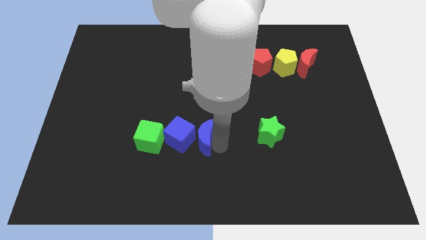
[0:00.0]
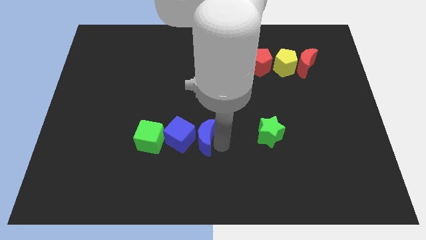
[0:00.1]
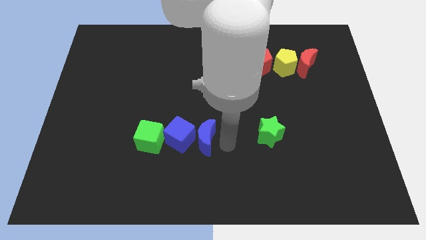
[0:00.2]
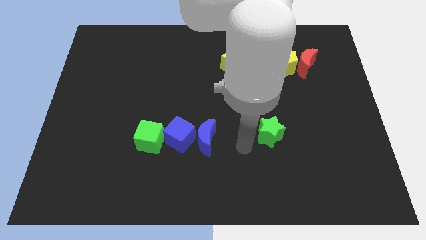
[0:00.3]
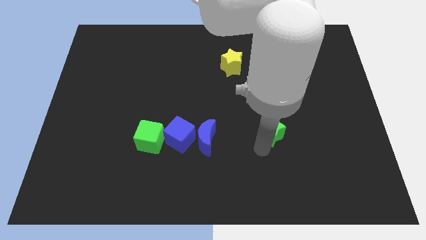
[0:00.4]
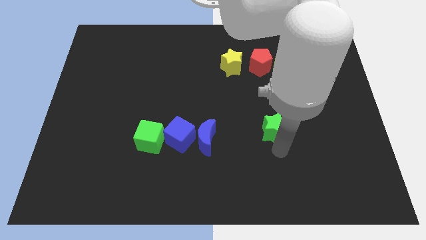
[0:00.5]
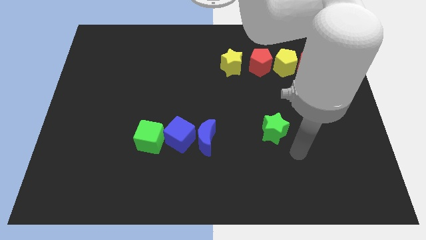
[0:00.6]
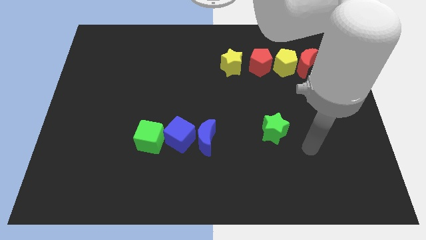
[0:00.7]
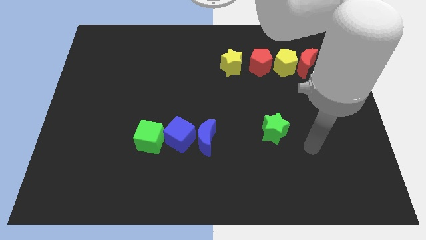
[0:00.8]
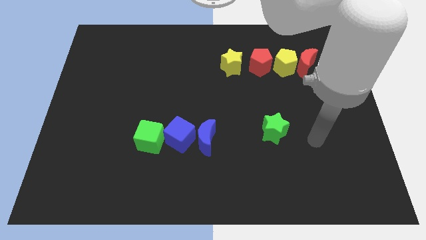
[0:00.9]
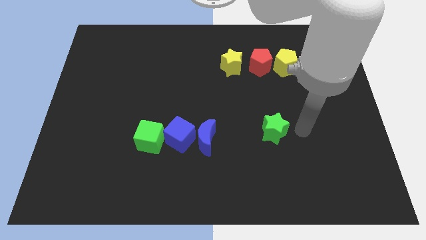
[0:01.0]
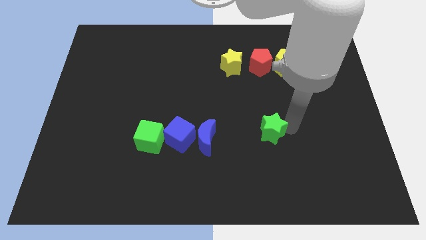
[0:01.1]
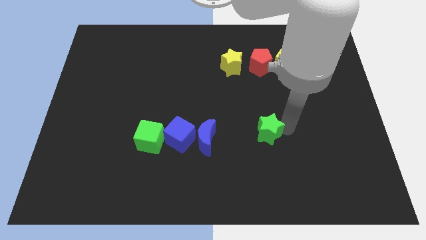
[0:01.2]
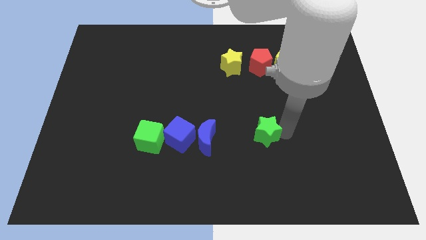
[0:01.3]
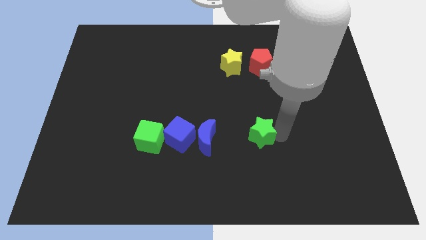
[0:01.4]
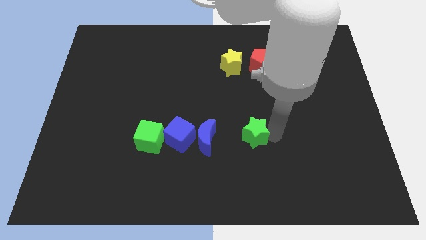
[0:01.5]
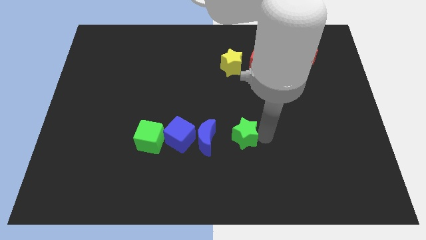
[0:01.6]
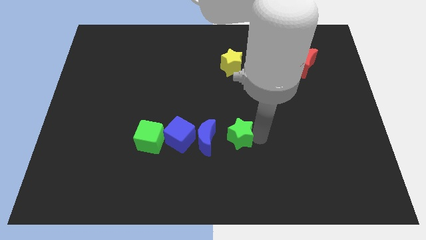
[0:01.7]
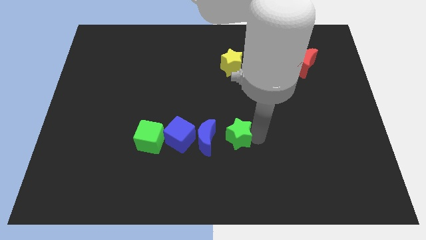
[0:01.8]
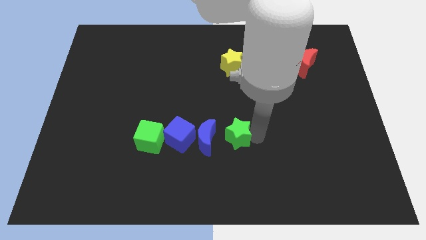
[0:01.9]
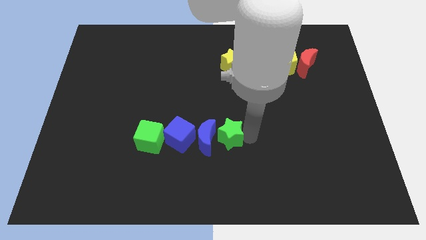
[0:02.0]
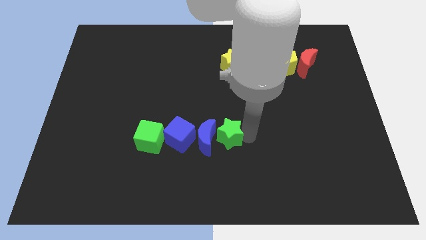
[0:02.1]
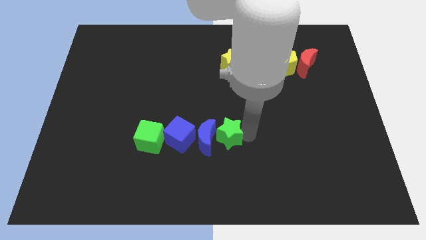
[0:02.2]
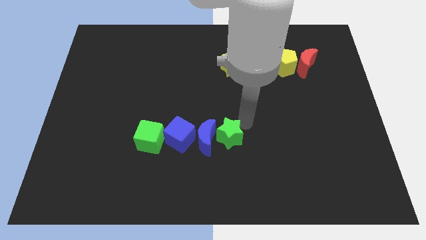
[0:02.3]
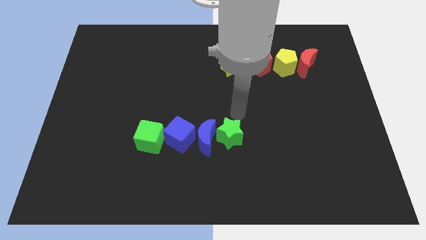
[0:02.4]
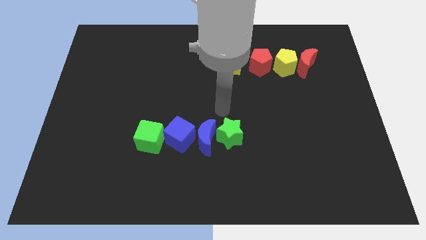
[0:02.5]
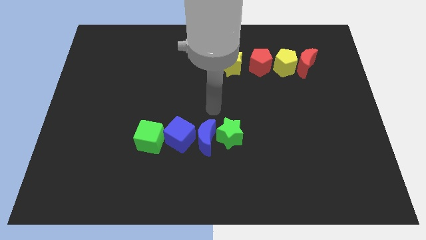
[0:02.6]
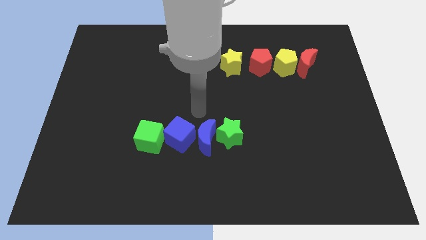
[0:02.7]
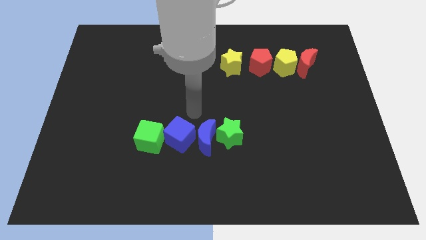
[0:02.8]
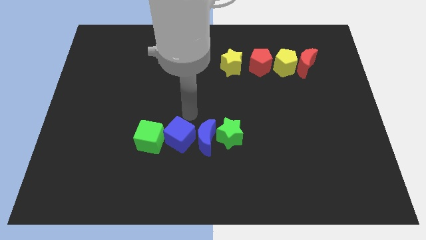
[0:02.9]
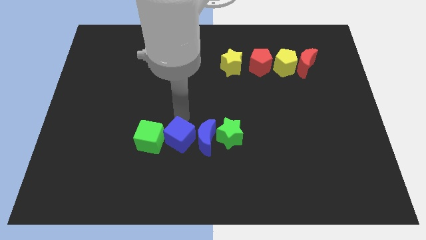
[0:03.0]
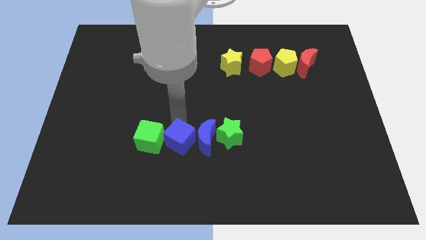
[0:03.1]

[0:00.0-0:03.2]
push the green star towards blue crescent

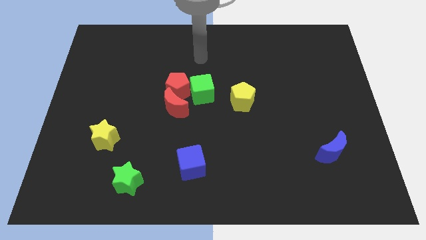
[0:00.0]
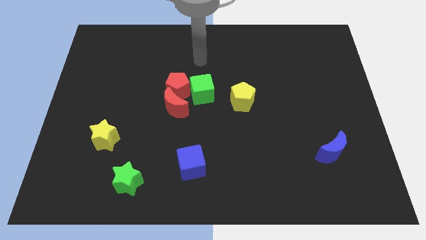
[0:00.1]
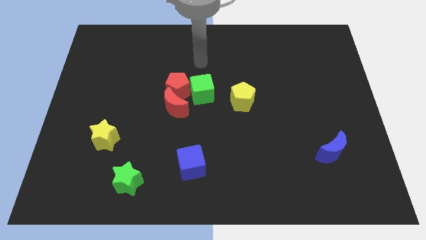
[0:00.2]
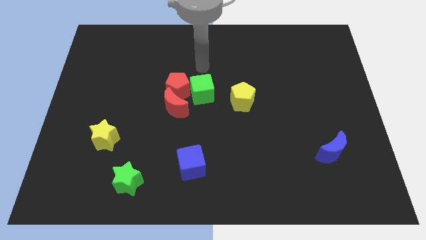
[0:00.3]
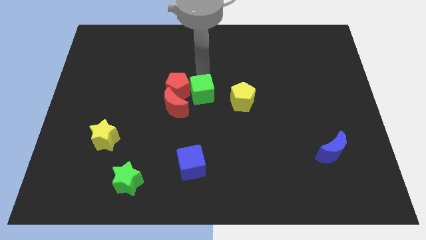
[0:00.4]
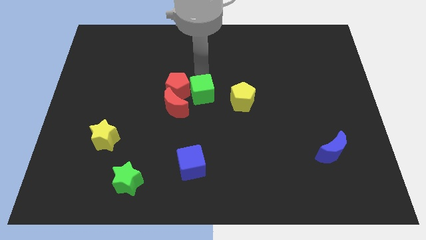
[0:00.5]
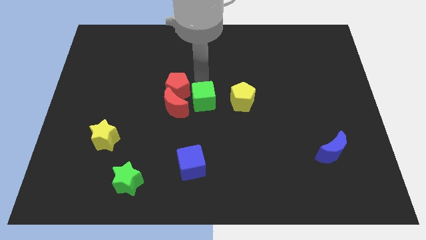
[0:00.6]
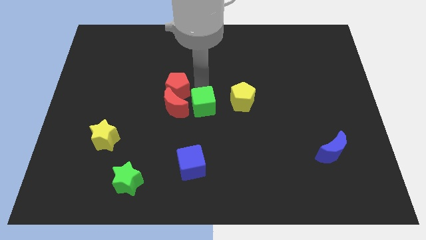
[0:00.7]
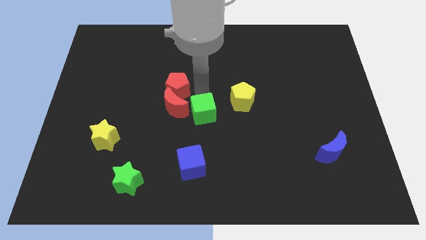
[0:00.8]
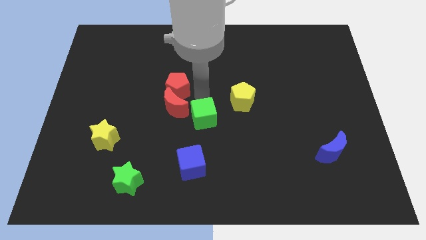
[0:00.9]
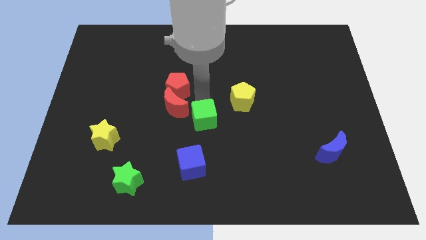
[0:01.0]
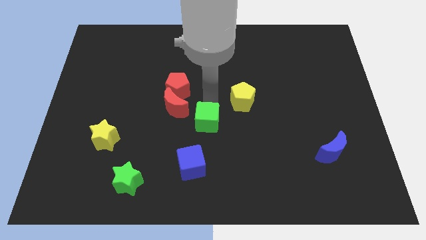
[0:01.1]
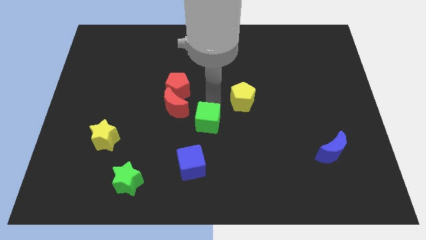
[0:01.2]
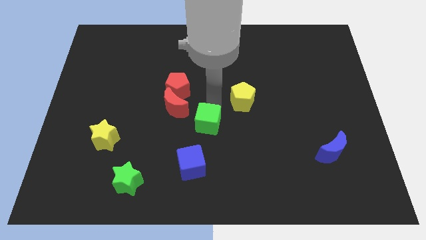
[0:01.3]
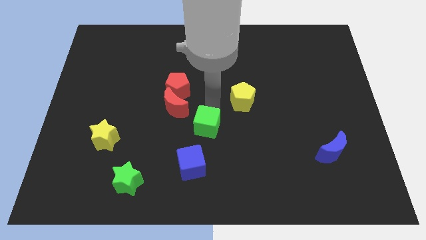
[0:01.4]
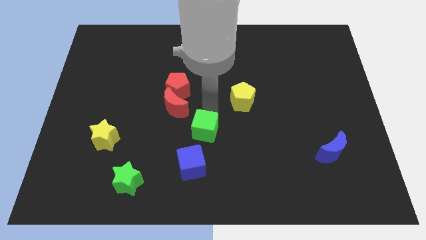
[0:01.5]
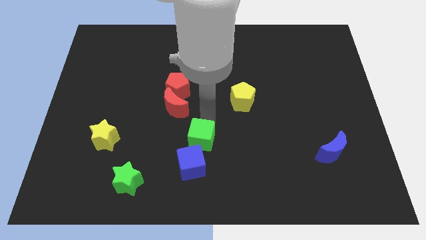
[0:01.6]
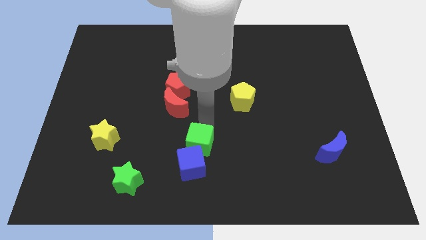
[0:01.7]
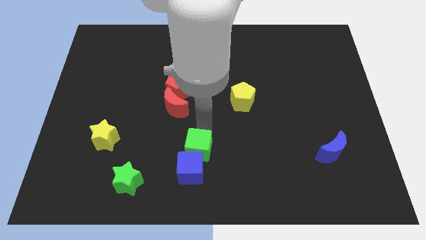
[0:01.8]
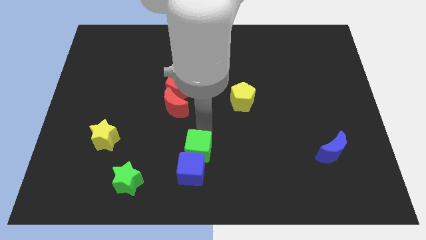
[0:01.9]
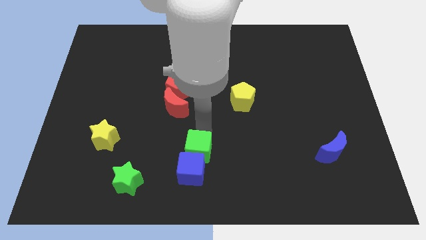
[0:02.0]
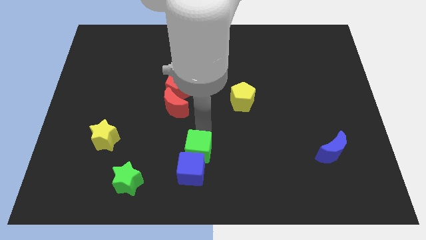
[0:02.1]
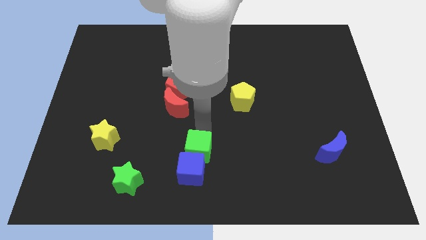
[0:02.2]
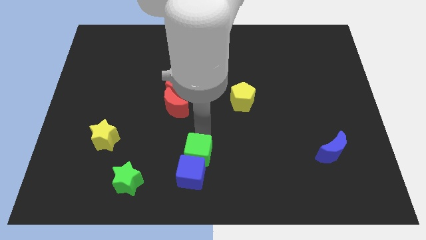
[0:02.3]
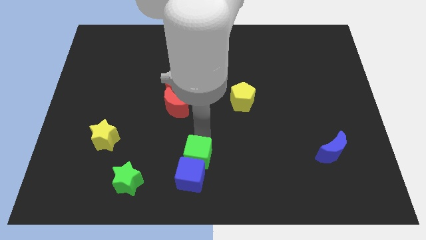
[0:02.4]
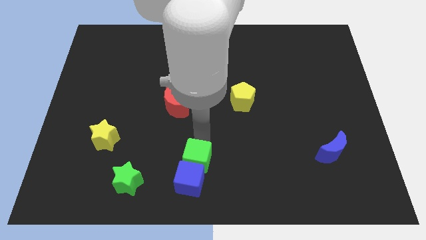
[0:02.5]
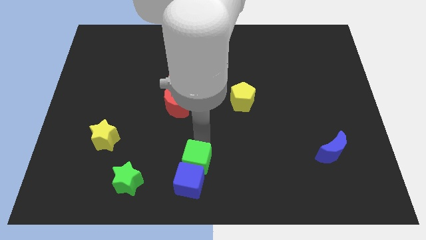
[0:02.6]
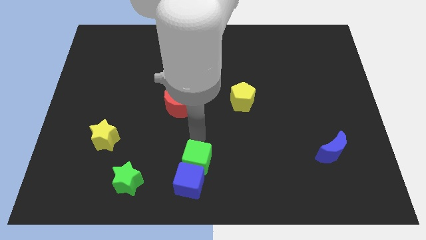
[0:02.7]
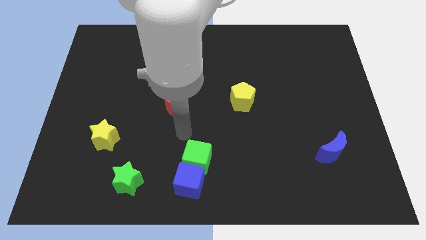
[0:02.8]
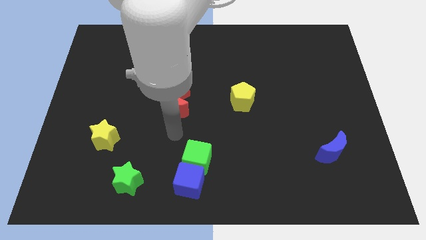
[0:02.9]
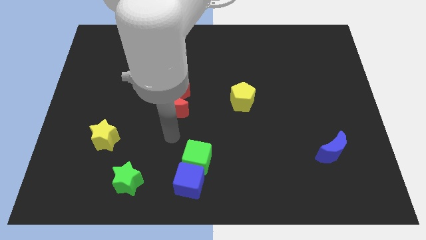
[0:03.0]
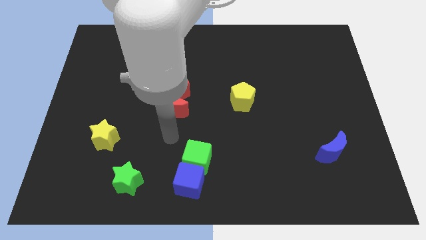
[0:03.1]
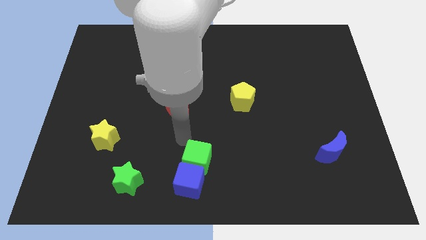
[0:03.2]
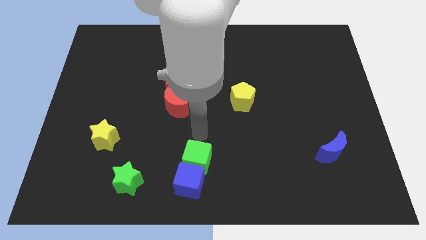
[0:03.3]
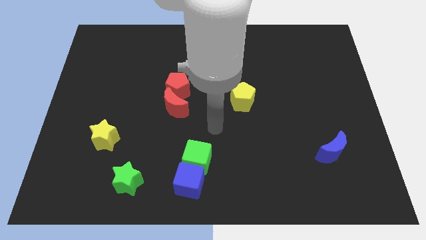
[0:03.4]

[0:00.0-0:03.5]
push the green cube into the blue cube

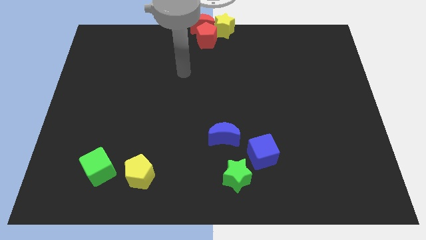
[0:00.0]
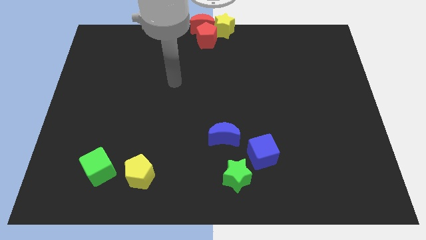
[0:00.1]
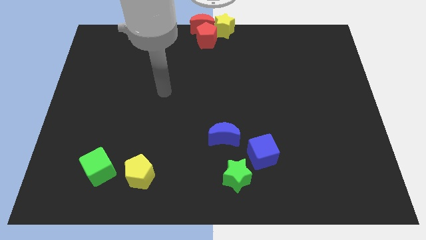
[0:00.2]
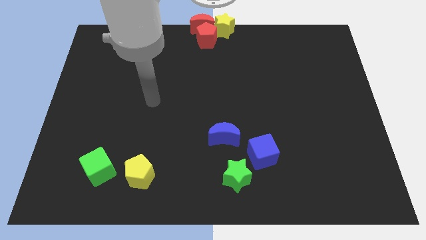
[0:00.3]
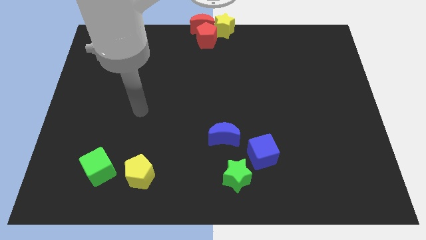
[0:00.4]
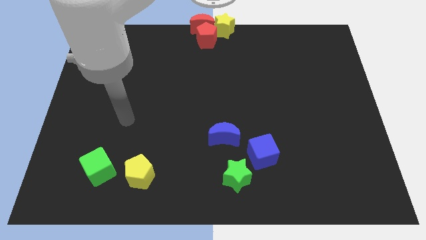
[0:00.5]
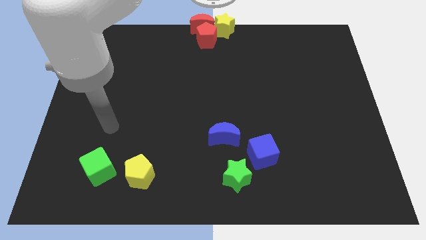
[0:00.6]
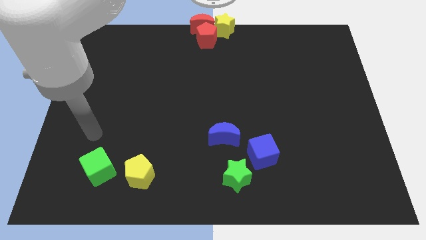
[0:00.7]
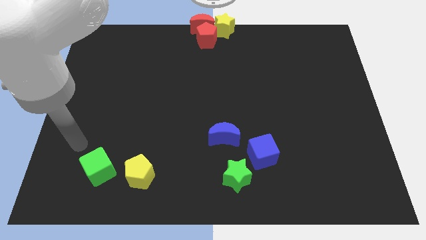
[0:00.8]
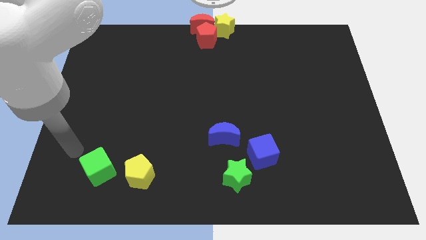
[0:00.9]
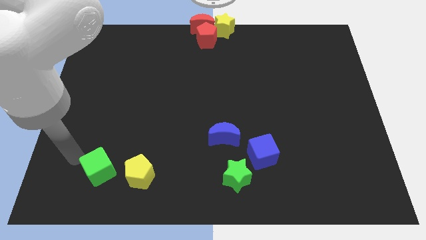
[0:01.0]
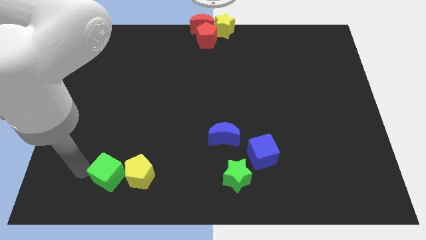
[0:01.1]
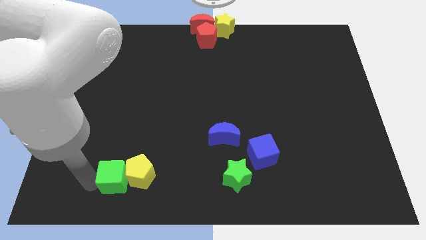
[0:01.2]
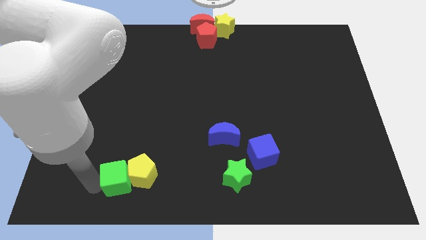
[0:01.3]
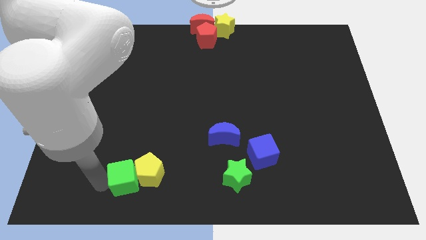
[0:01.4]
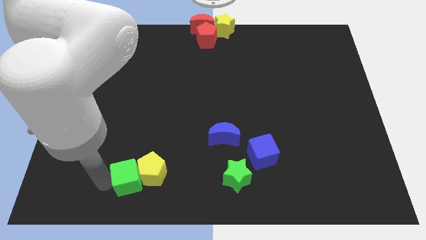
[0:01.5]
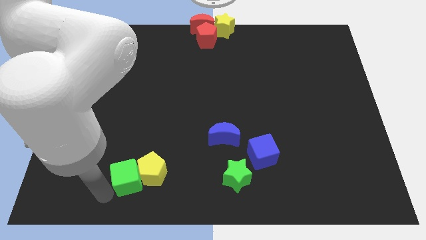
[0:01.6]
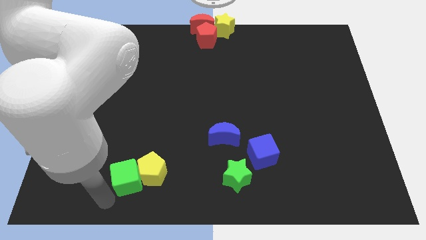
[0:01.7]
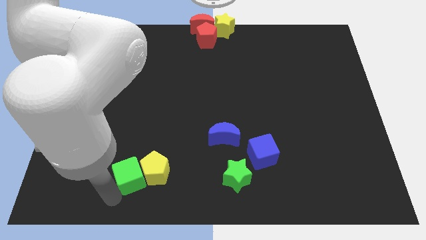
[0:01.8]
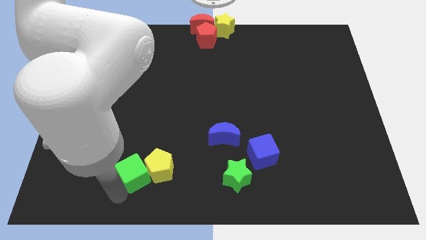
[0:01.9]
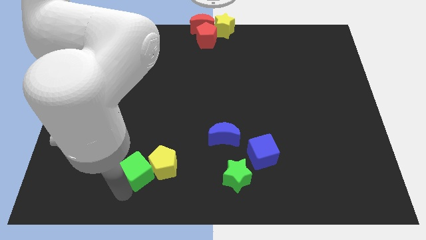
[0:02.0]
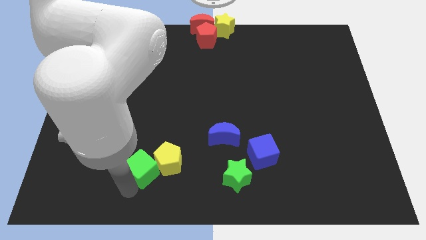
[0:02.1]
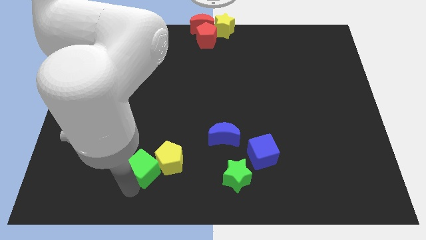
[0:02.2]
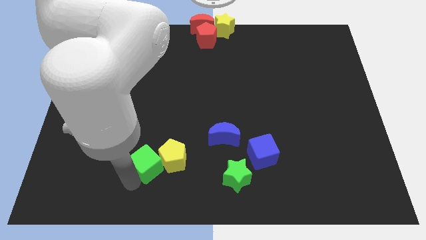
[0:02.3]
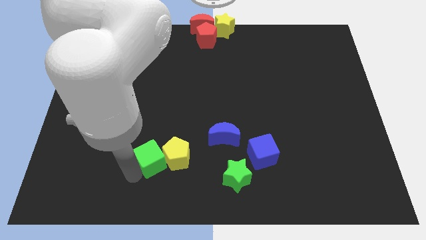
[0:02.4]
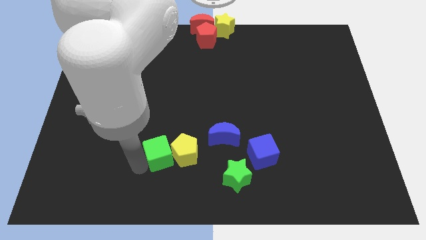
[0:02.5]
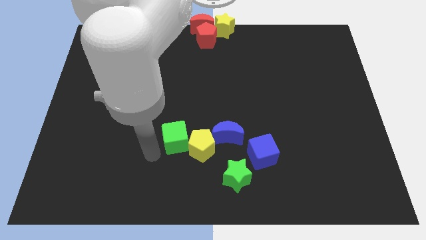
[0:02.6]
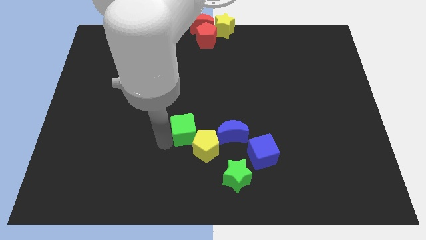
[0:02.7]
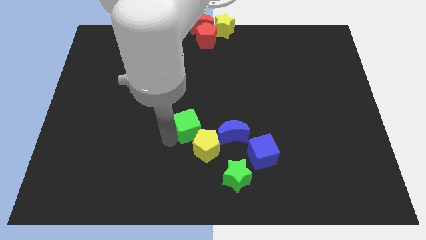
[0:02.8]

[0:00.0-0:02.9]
push the green cube and yellow penatgon to left side of blue moon
